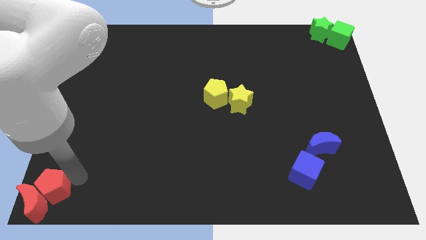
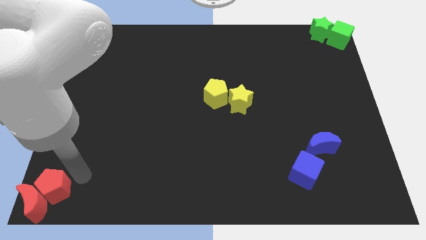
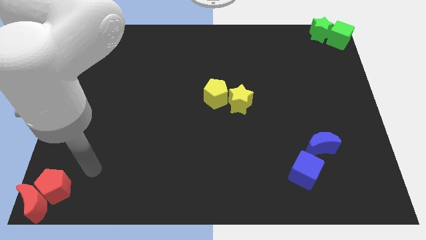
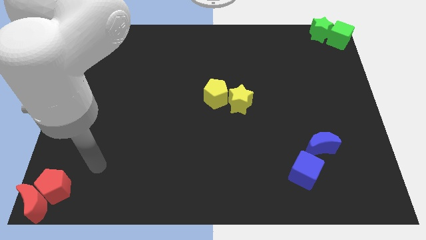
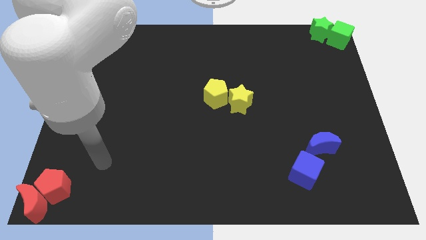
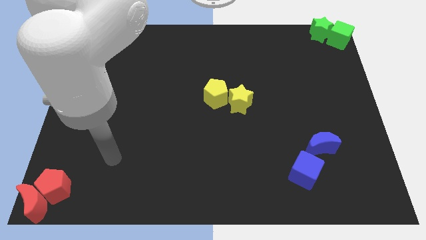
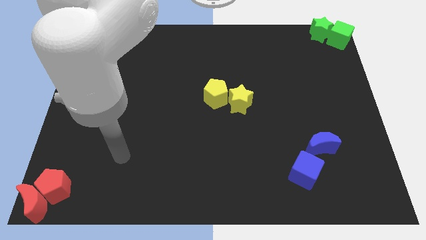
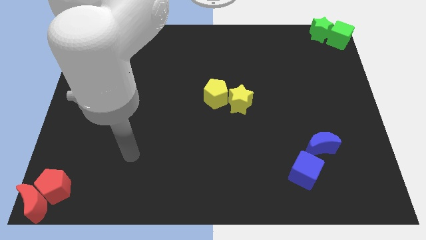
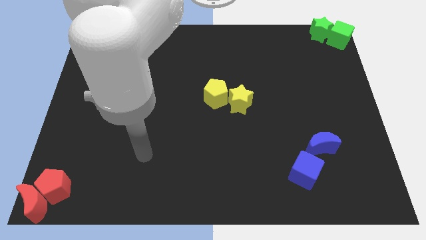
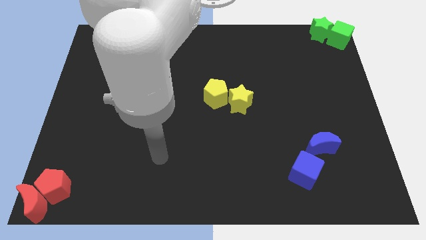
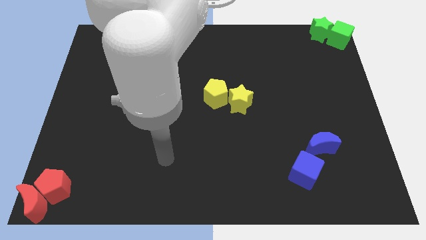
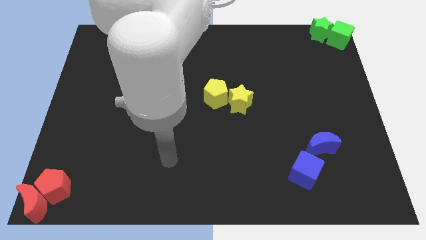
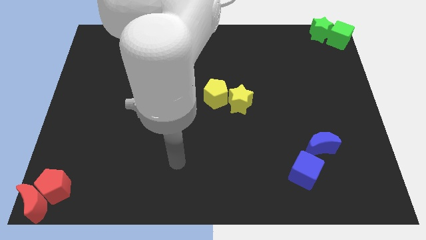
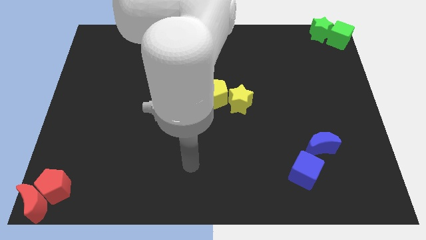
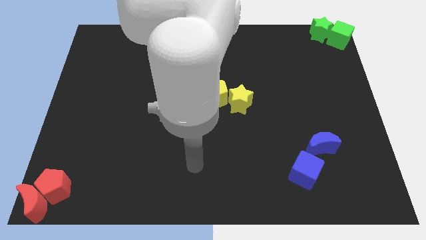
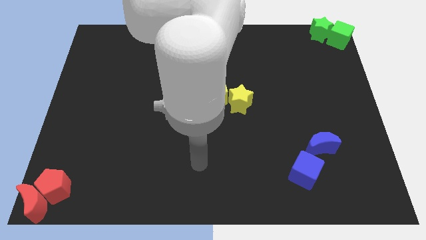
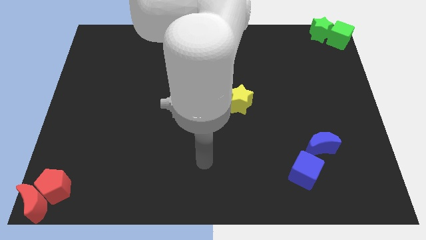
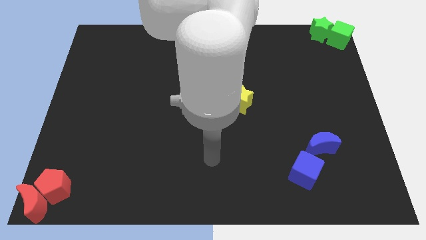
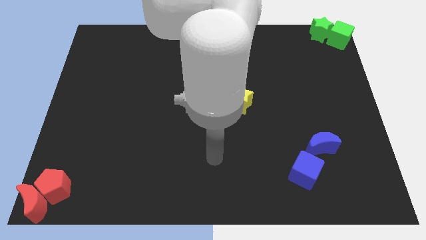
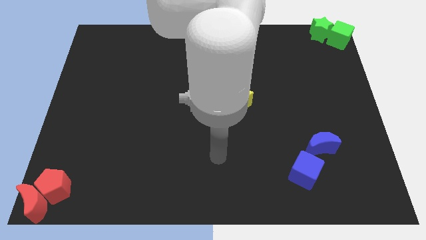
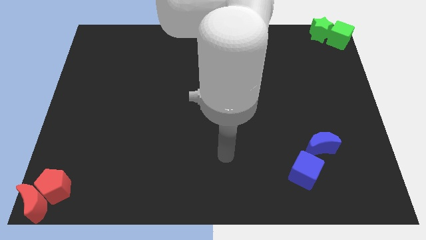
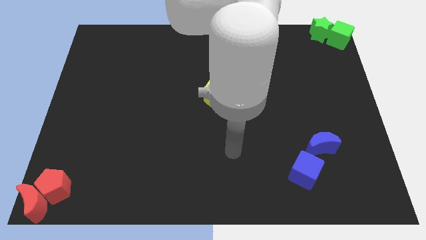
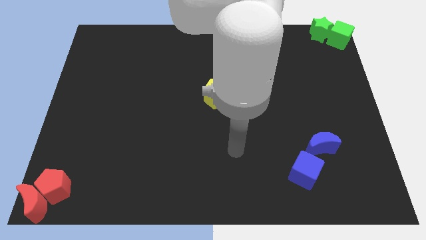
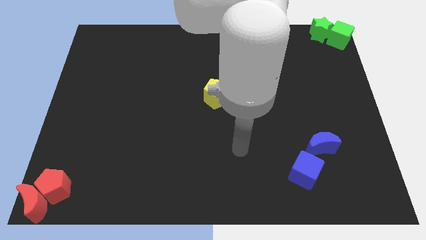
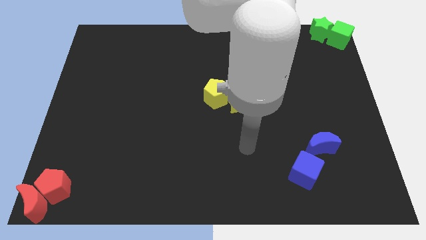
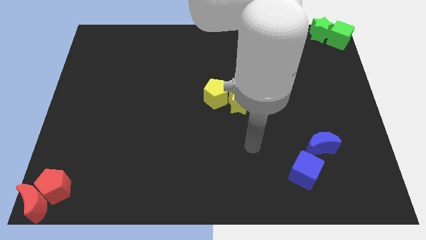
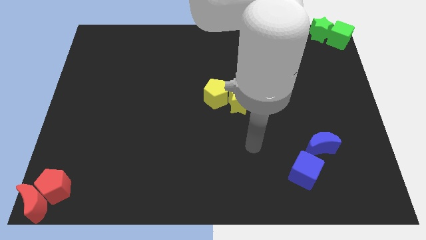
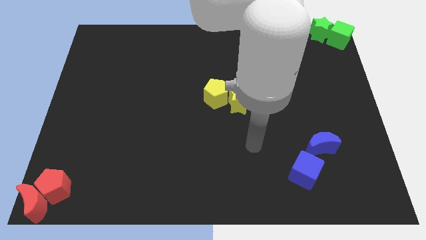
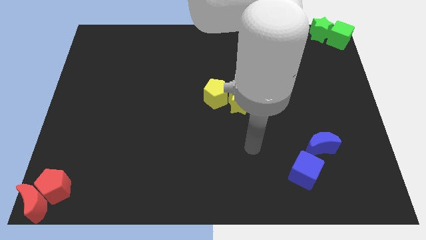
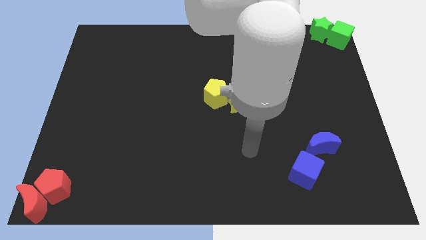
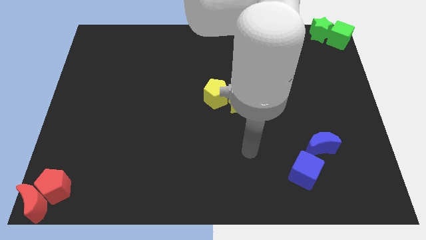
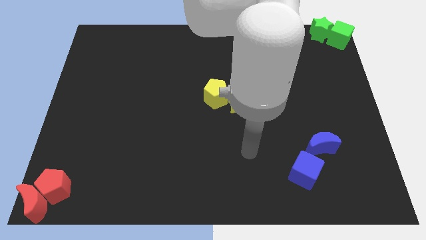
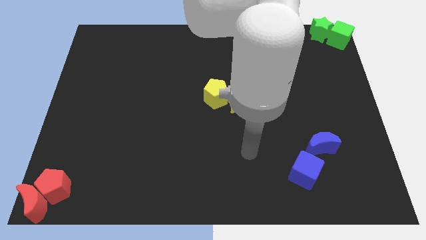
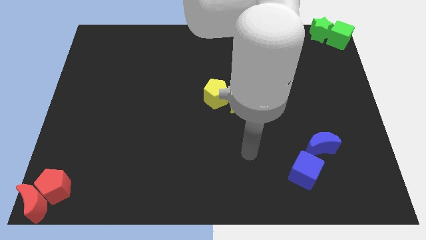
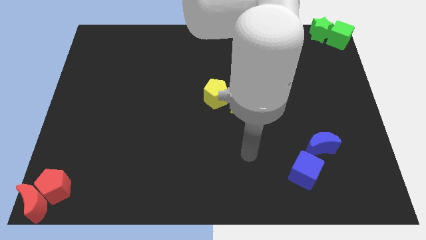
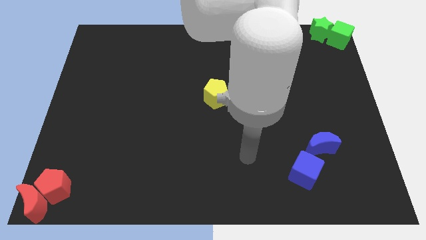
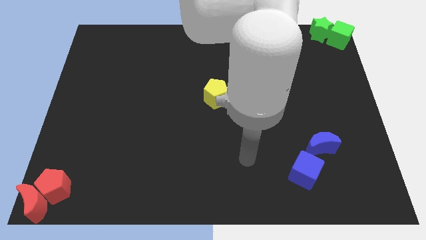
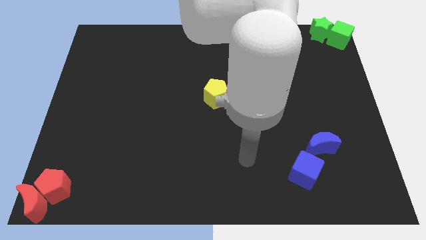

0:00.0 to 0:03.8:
move the arm away from the red pentagon

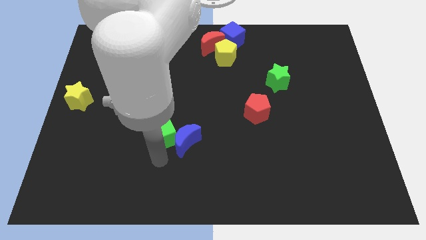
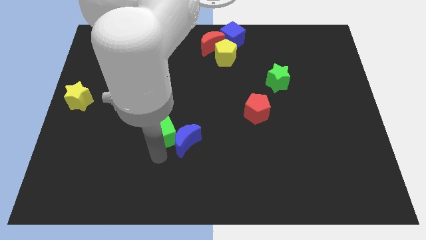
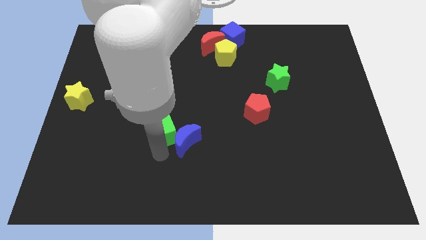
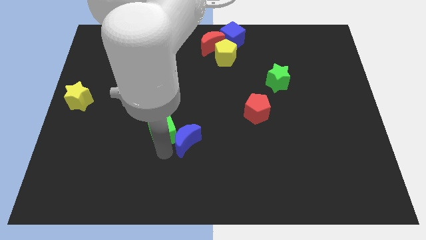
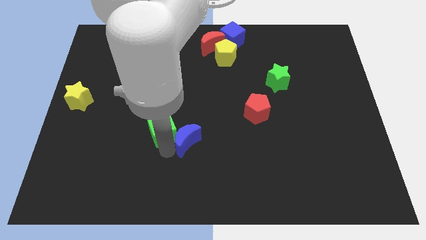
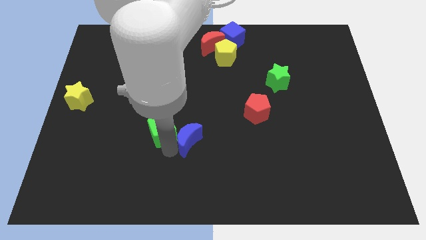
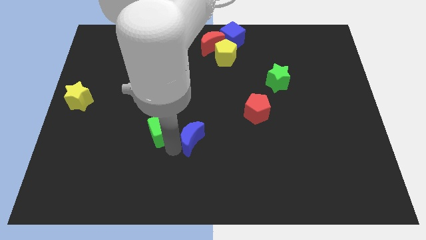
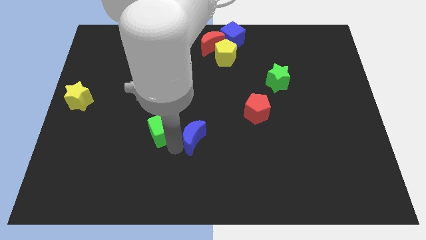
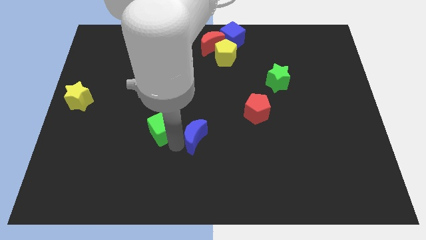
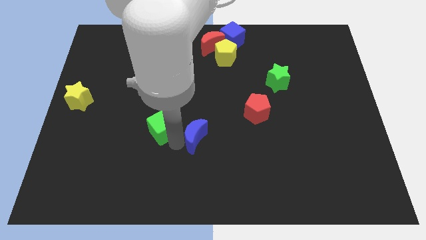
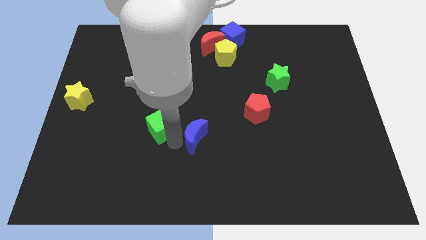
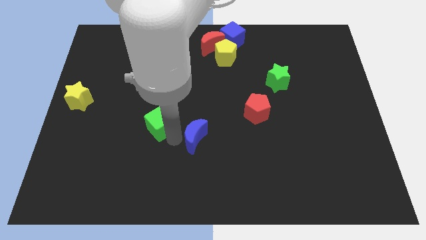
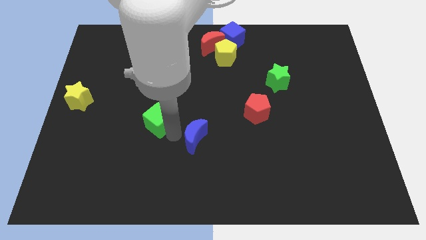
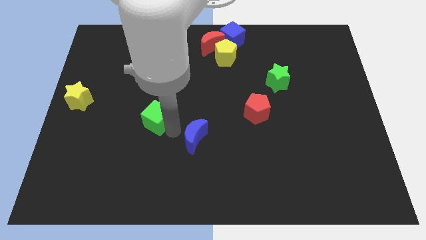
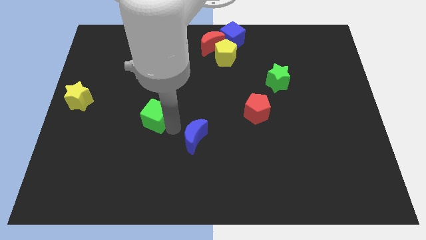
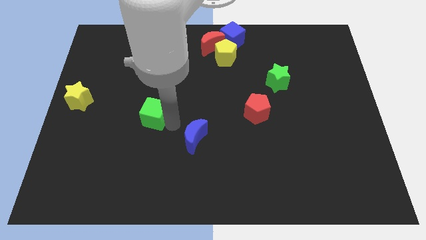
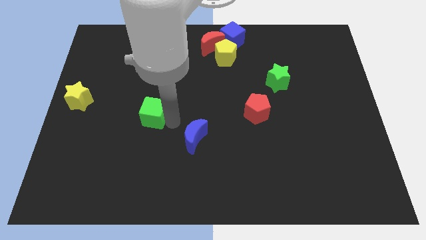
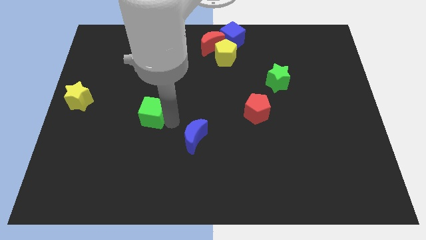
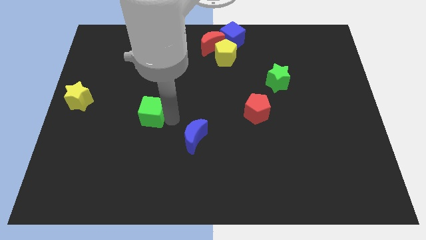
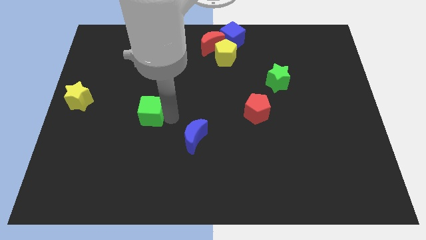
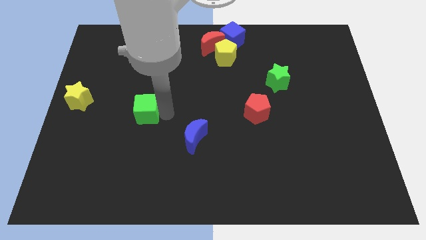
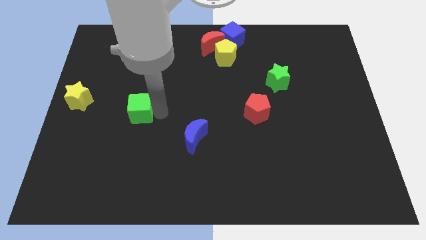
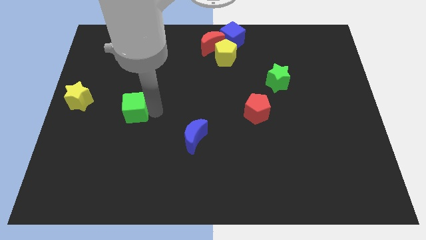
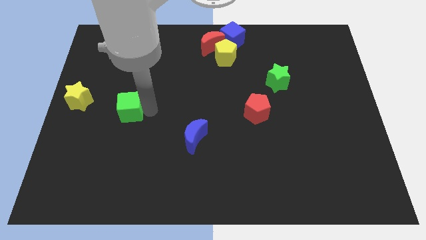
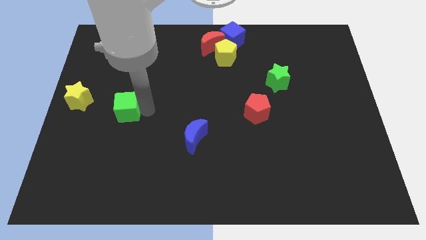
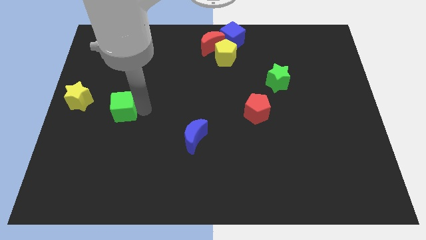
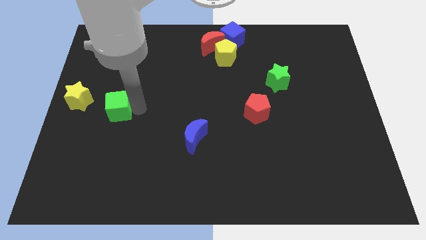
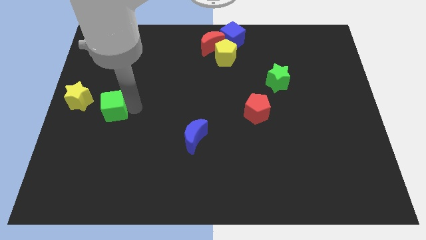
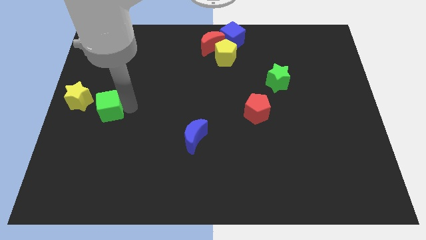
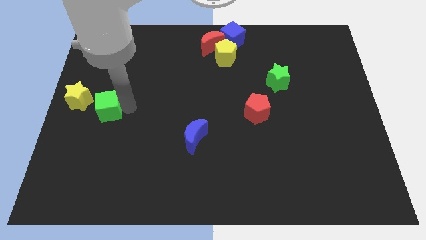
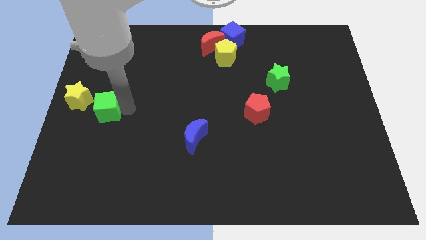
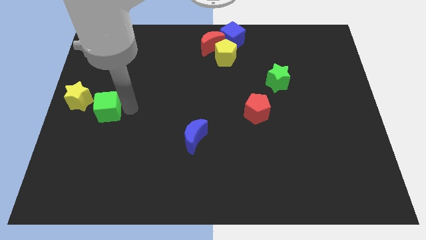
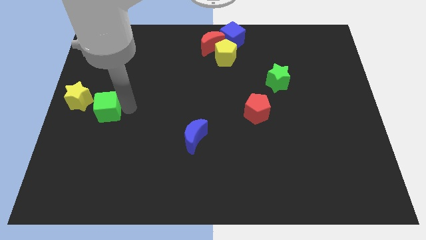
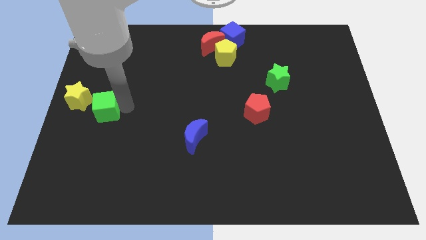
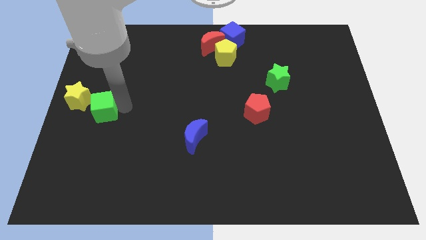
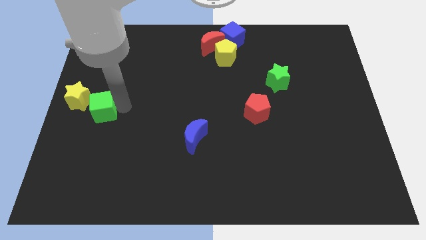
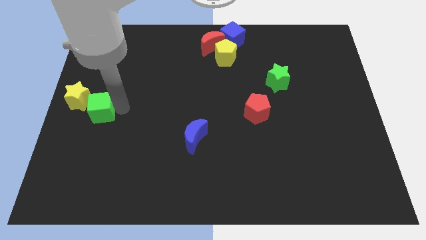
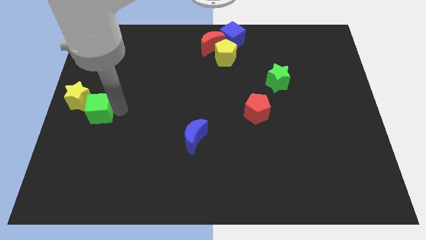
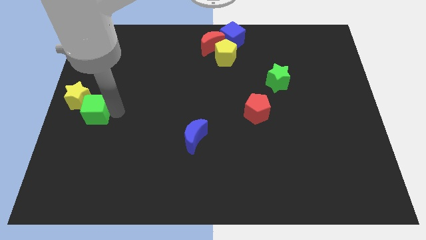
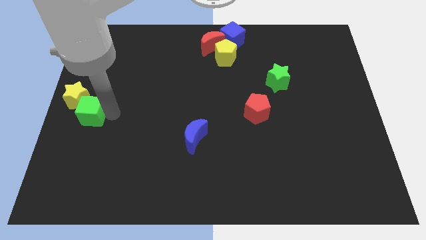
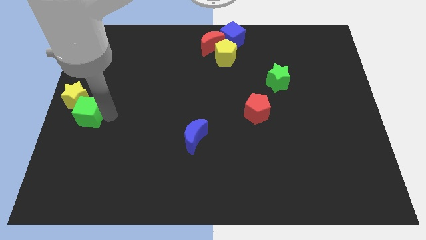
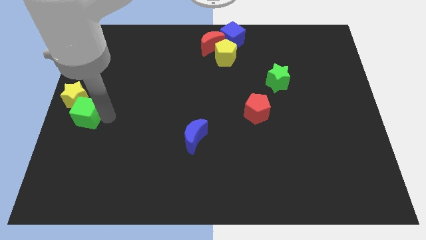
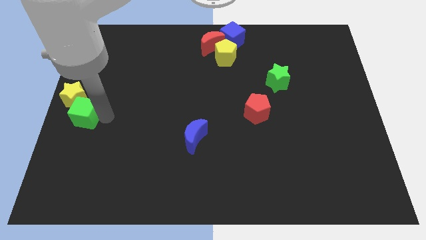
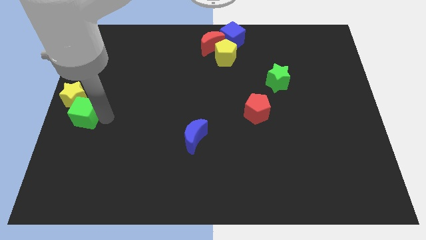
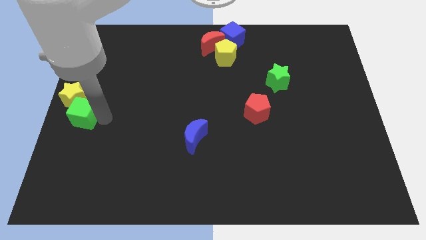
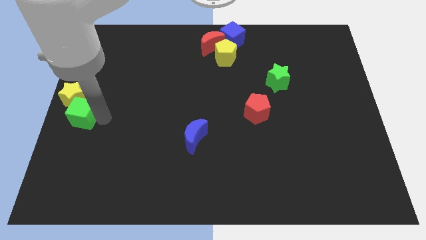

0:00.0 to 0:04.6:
push the green cube into the yellow star

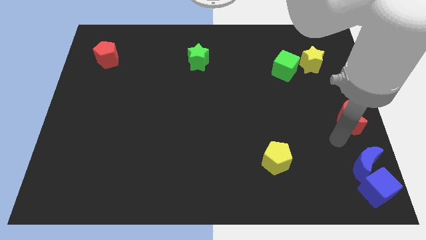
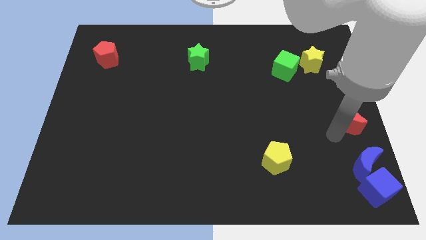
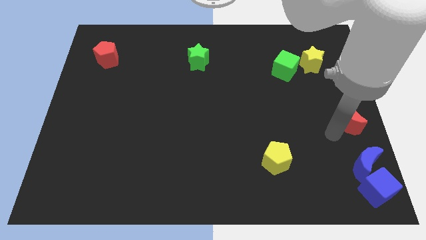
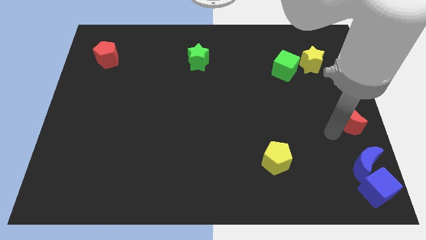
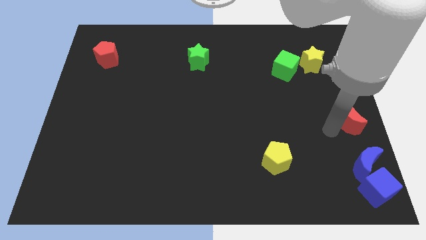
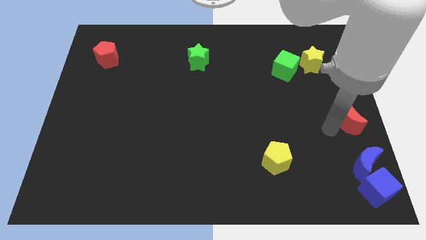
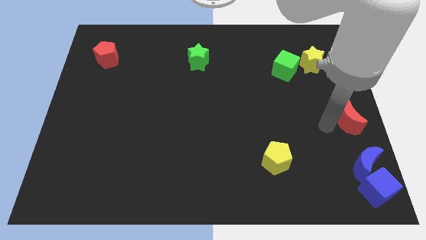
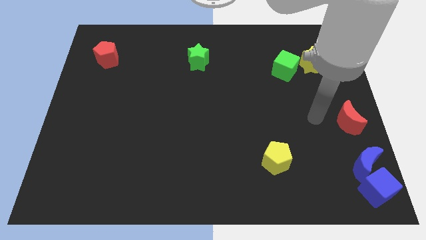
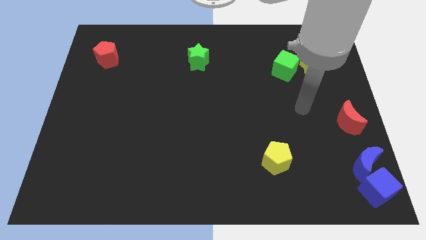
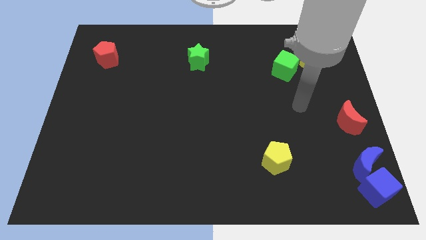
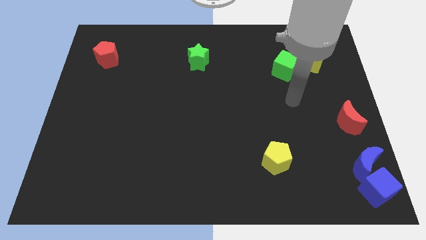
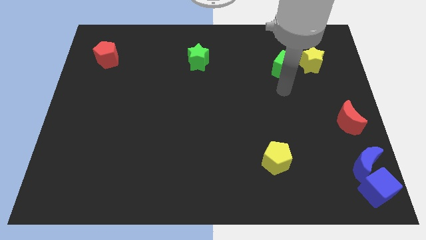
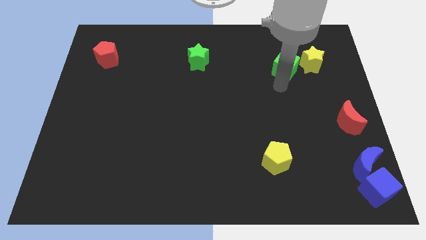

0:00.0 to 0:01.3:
point your arm at the bottom of the green cube
